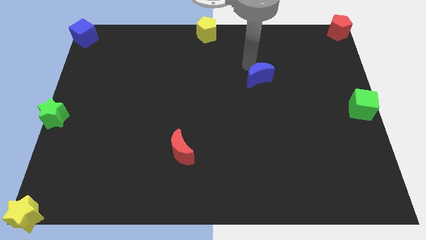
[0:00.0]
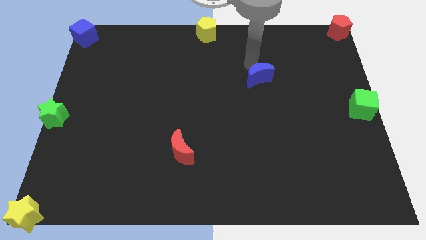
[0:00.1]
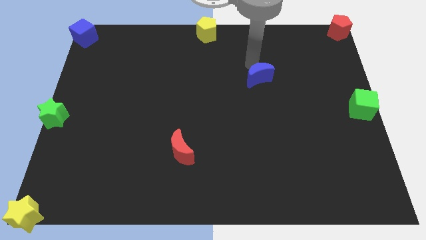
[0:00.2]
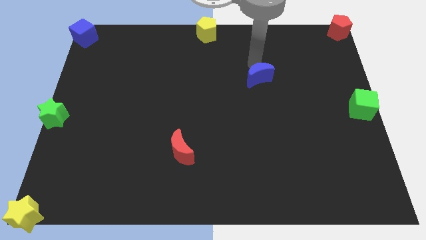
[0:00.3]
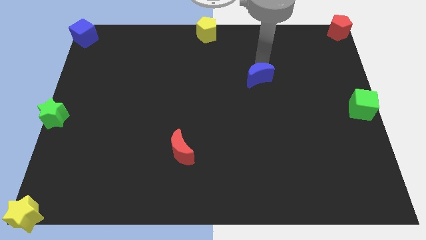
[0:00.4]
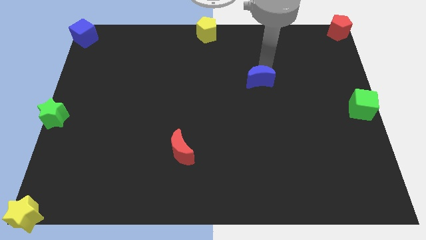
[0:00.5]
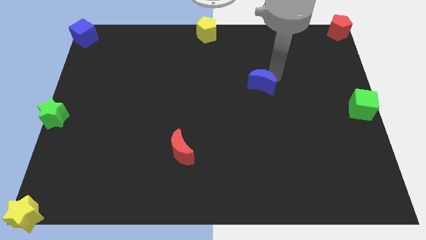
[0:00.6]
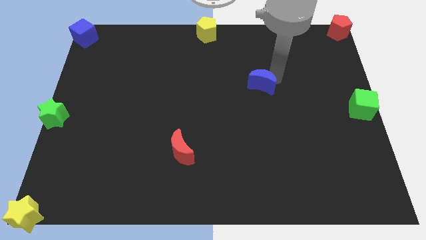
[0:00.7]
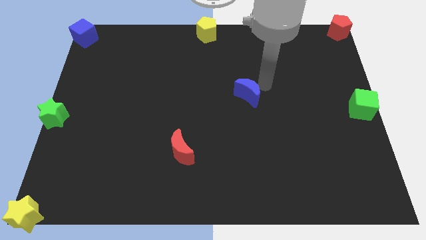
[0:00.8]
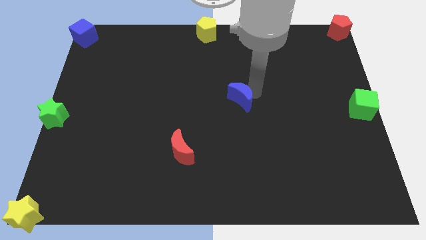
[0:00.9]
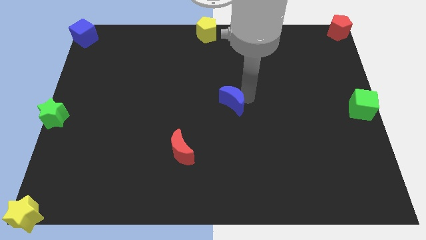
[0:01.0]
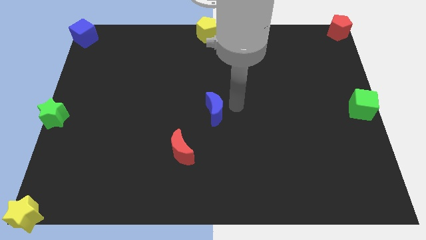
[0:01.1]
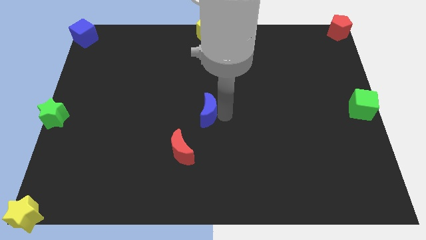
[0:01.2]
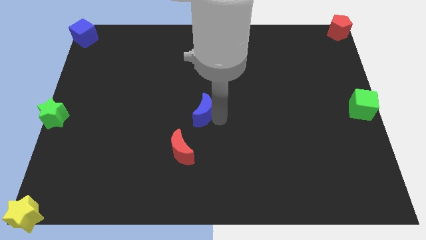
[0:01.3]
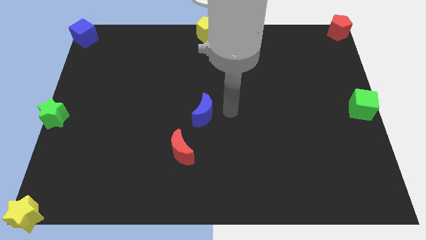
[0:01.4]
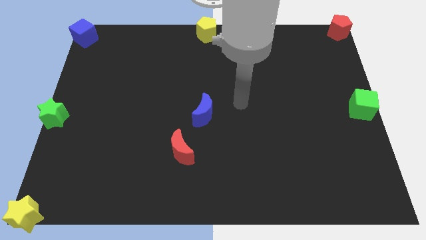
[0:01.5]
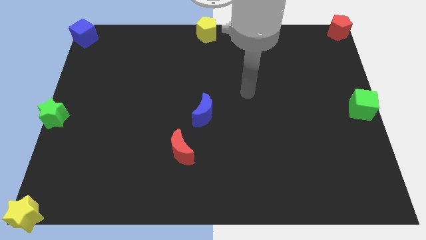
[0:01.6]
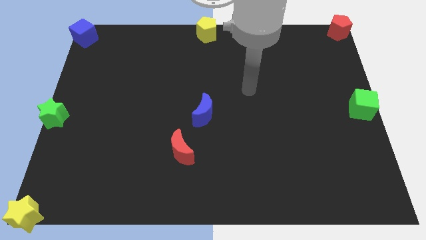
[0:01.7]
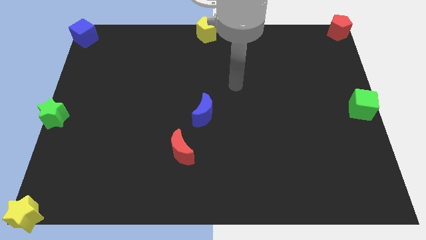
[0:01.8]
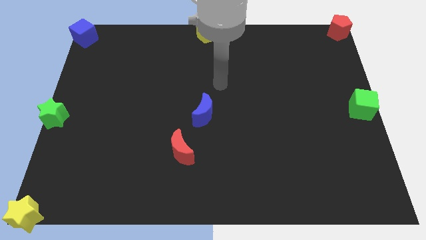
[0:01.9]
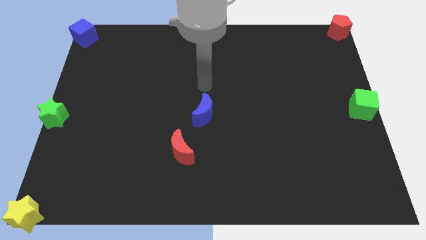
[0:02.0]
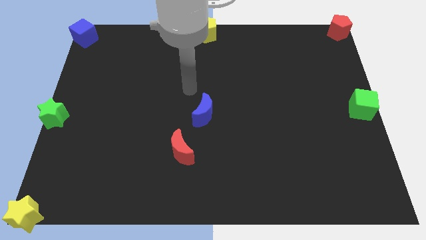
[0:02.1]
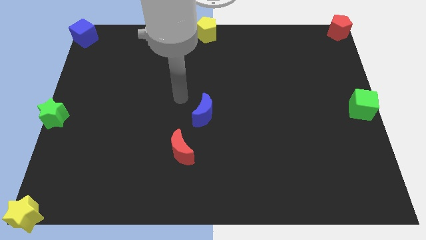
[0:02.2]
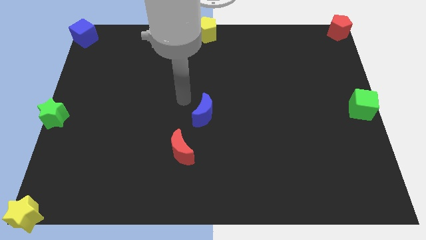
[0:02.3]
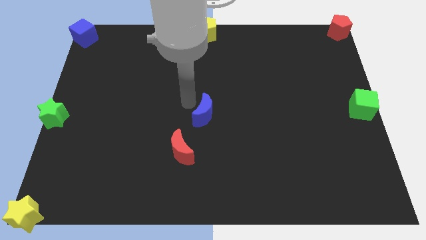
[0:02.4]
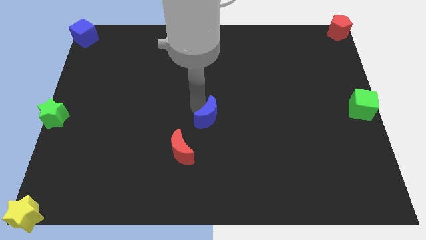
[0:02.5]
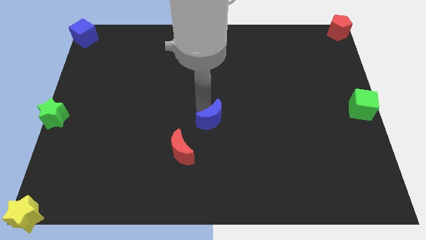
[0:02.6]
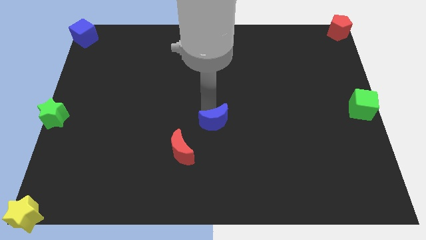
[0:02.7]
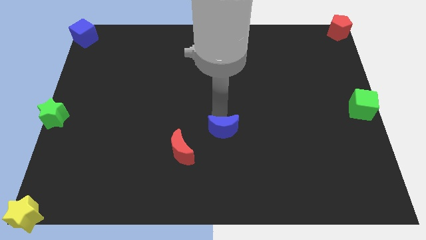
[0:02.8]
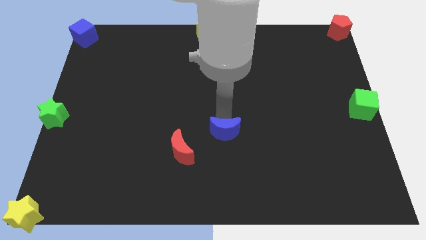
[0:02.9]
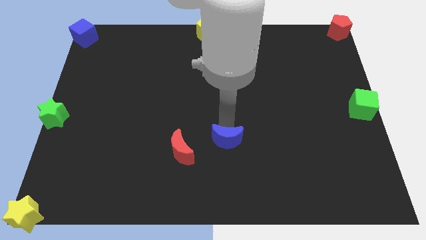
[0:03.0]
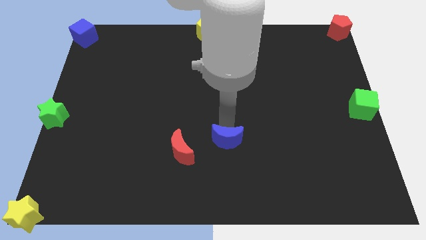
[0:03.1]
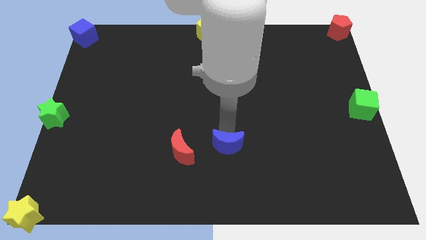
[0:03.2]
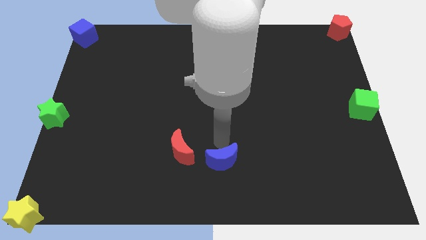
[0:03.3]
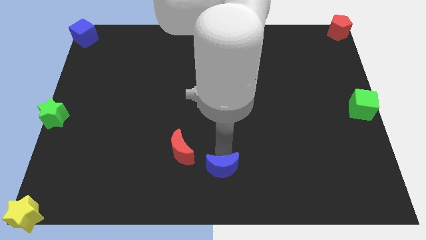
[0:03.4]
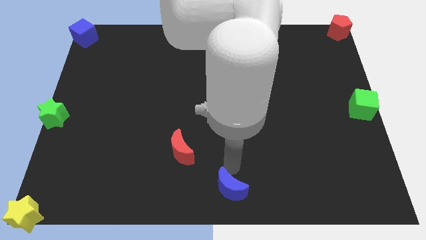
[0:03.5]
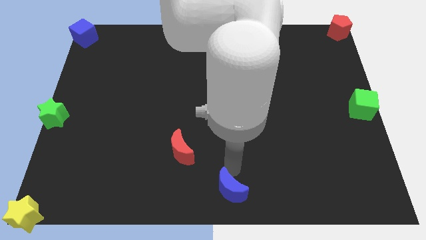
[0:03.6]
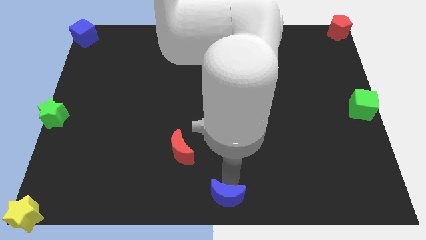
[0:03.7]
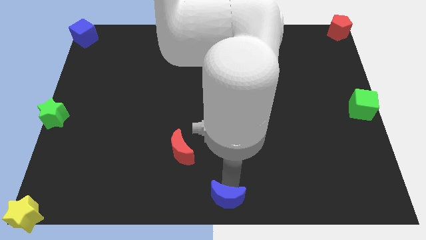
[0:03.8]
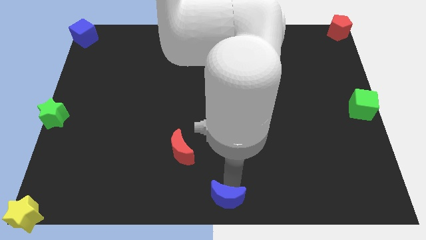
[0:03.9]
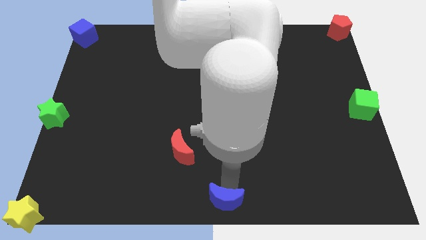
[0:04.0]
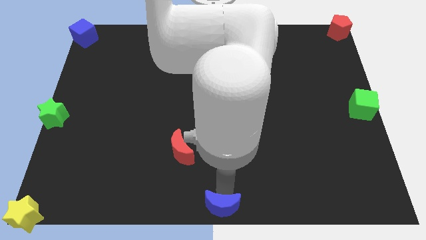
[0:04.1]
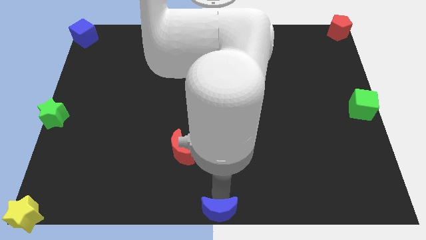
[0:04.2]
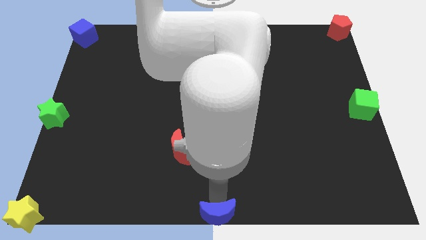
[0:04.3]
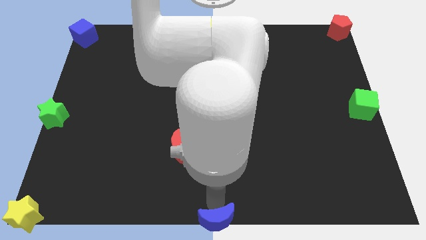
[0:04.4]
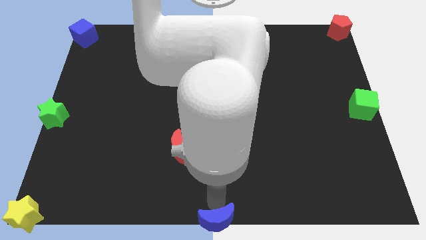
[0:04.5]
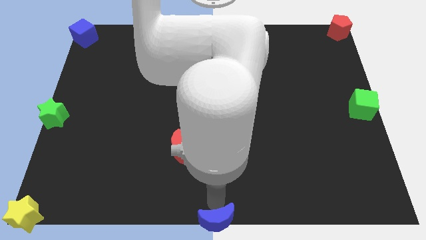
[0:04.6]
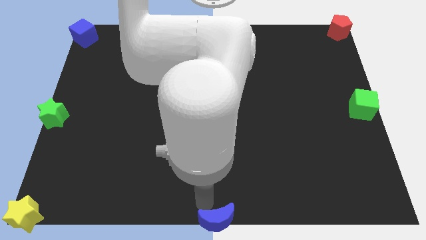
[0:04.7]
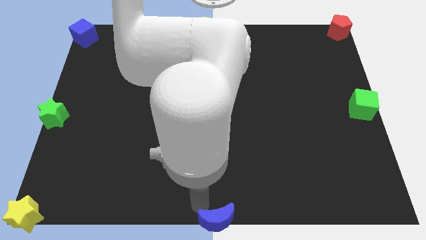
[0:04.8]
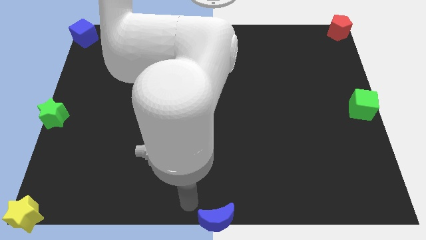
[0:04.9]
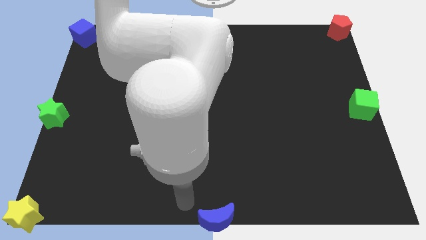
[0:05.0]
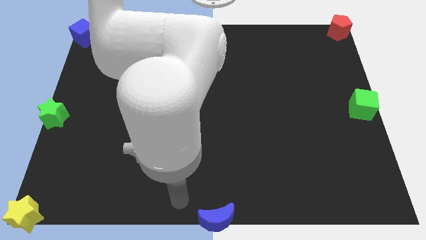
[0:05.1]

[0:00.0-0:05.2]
slide blue moon to the bottom center

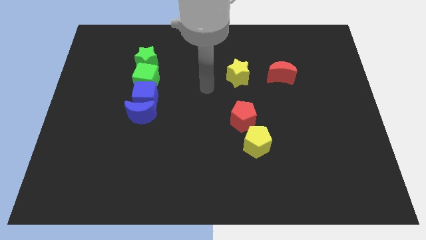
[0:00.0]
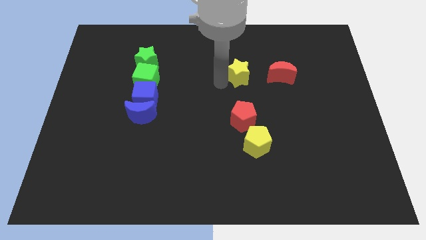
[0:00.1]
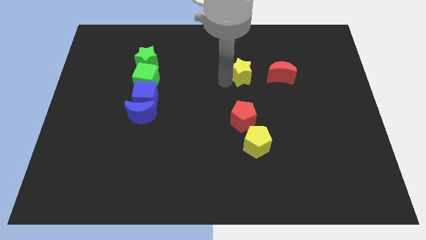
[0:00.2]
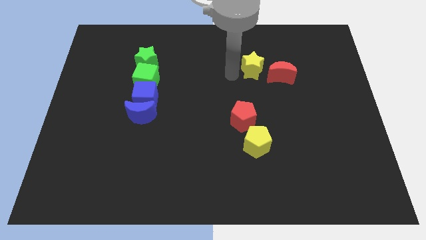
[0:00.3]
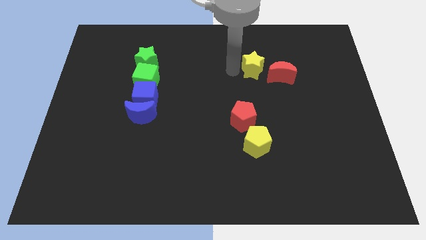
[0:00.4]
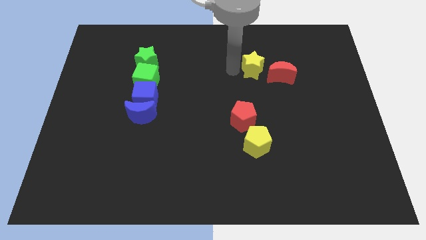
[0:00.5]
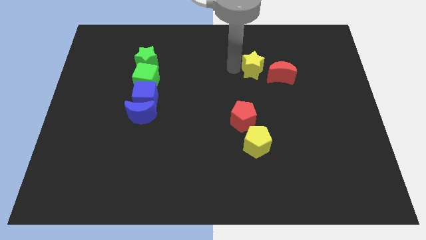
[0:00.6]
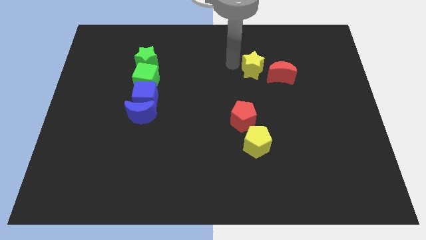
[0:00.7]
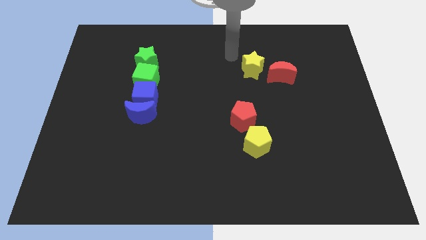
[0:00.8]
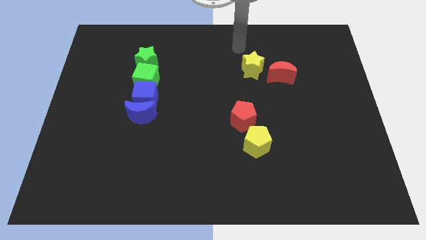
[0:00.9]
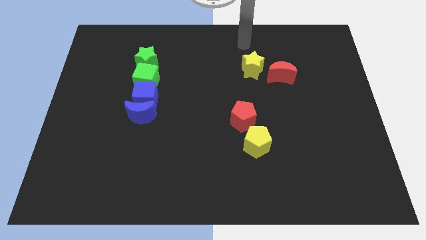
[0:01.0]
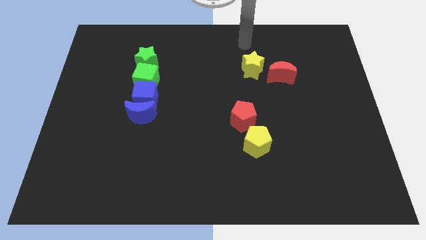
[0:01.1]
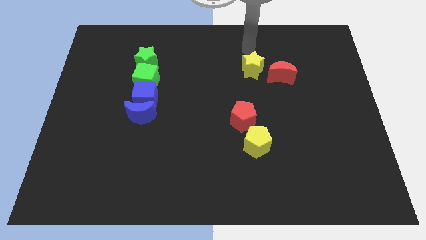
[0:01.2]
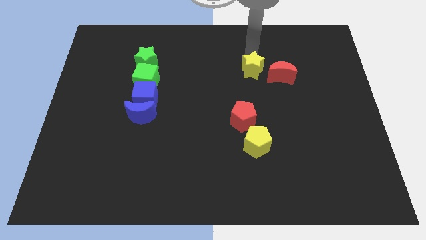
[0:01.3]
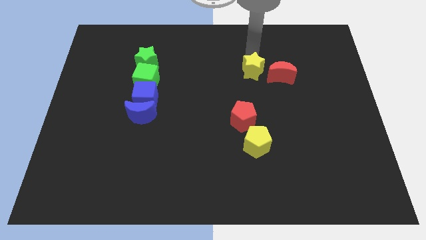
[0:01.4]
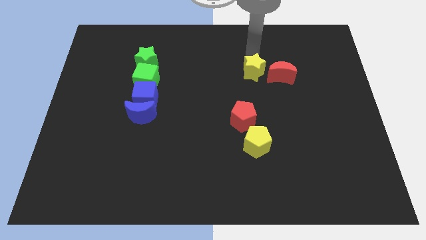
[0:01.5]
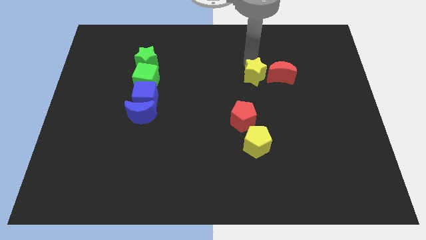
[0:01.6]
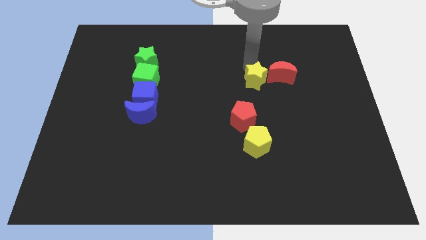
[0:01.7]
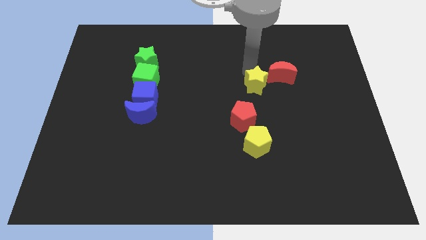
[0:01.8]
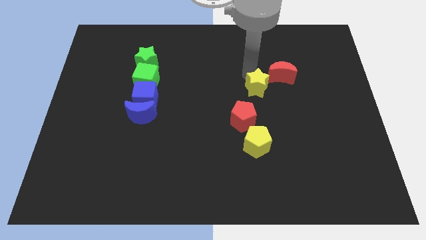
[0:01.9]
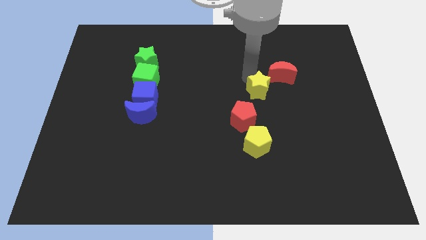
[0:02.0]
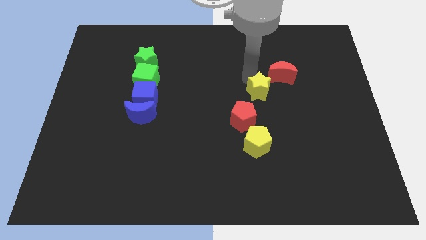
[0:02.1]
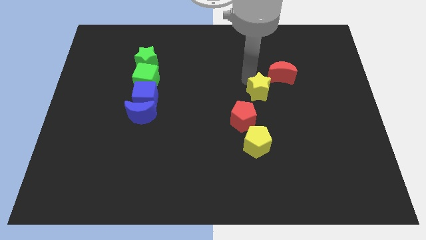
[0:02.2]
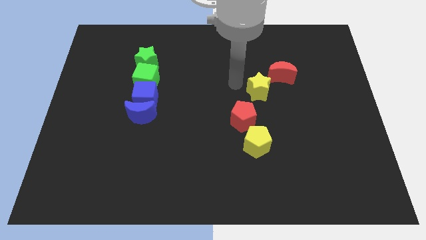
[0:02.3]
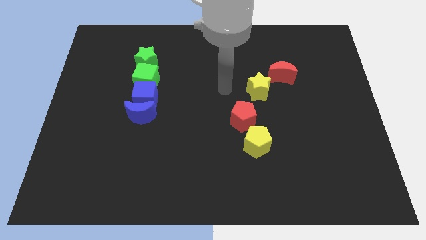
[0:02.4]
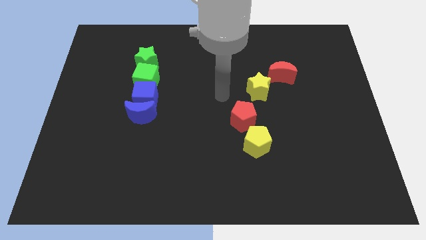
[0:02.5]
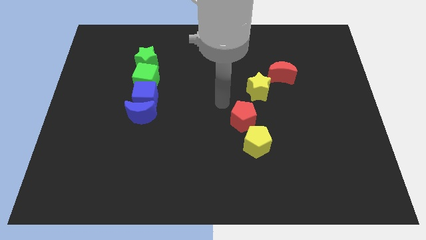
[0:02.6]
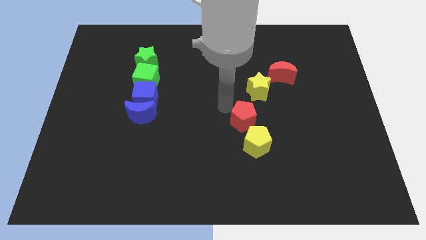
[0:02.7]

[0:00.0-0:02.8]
put the yellow star between the red moon and red pentagon

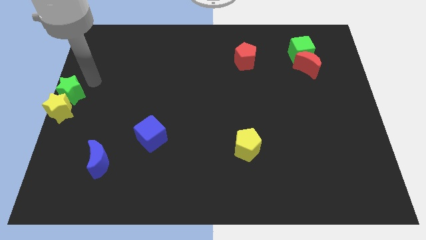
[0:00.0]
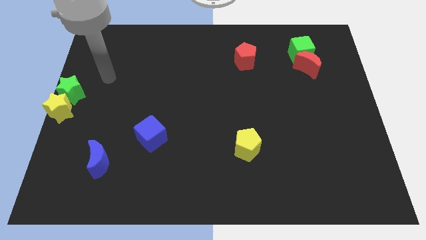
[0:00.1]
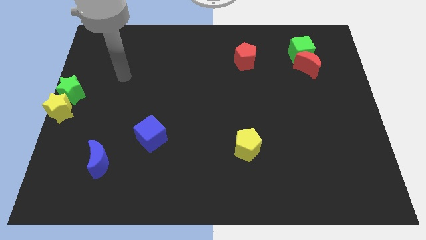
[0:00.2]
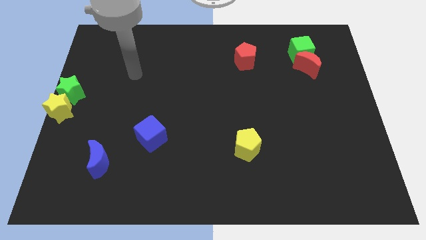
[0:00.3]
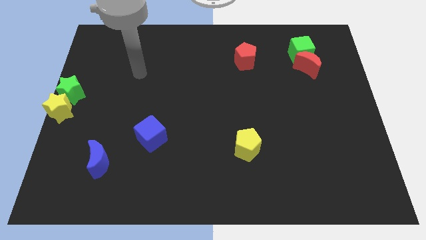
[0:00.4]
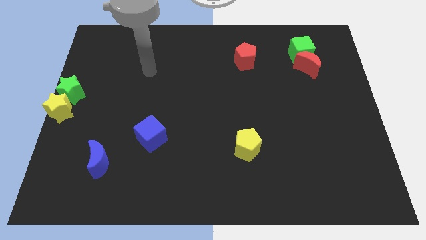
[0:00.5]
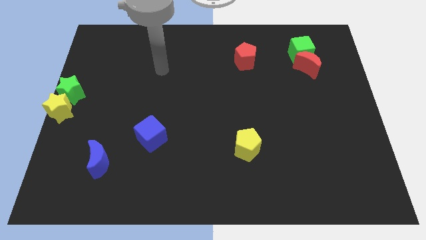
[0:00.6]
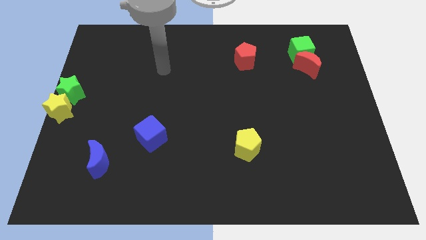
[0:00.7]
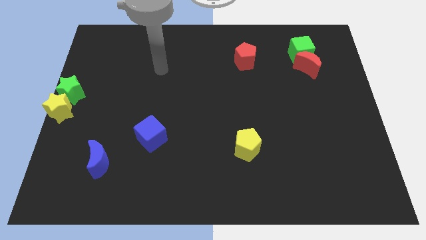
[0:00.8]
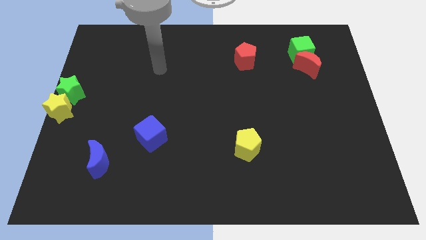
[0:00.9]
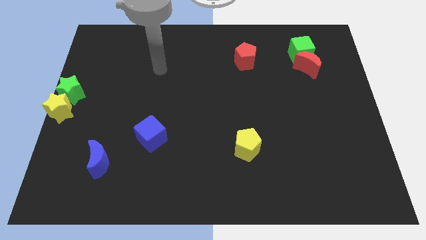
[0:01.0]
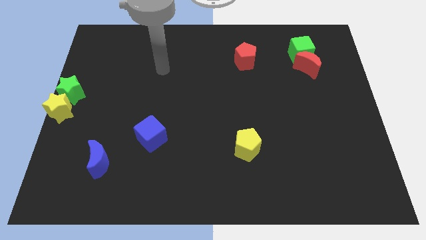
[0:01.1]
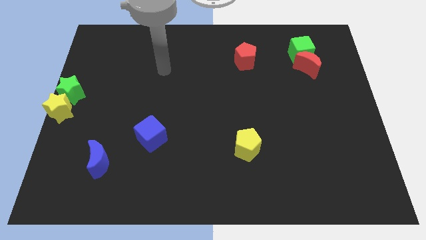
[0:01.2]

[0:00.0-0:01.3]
move the arm away from the green star
